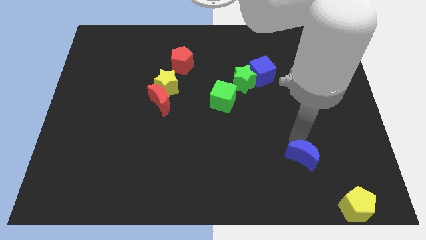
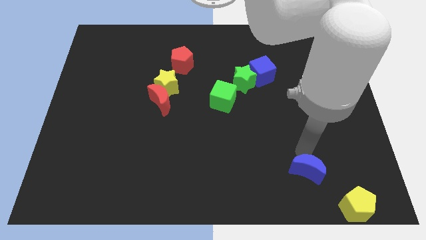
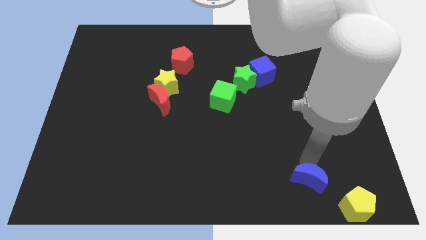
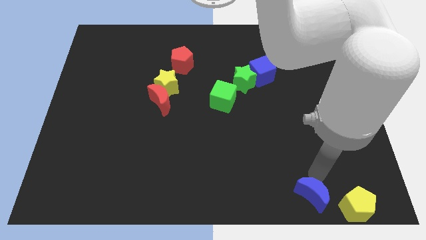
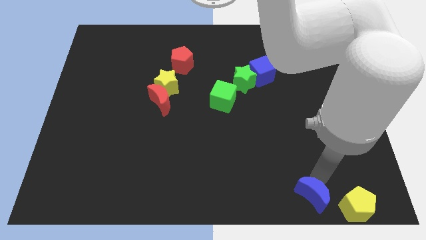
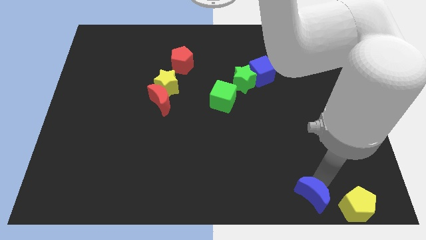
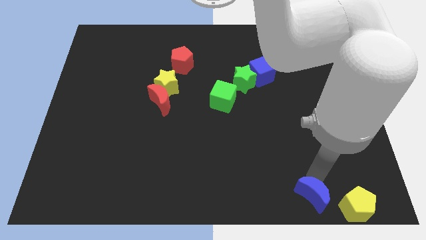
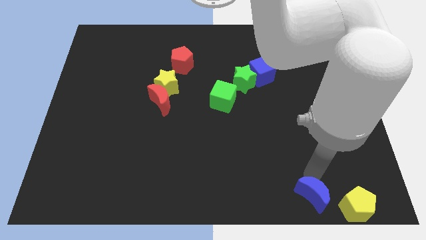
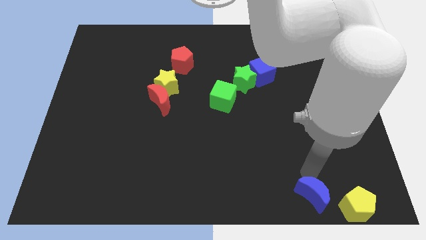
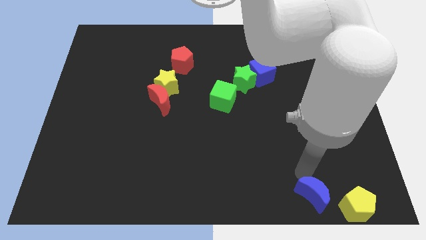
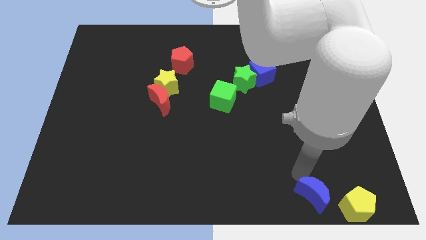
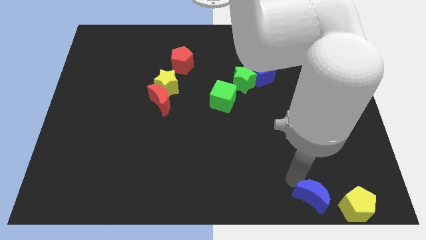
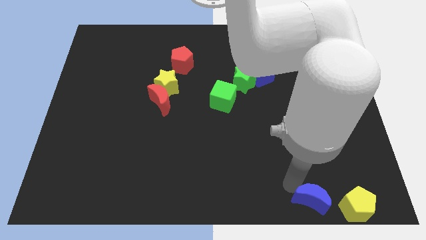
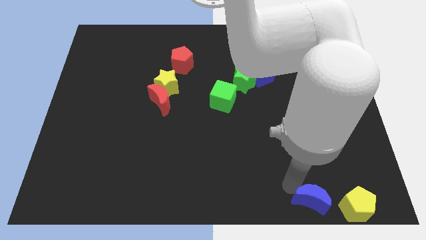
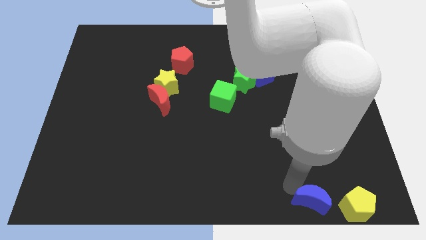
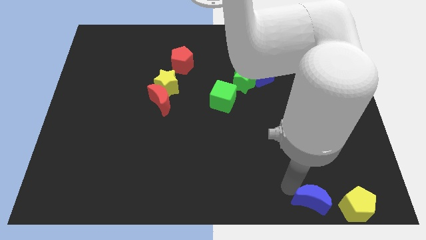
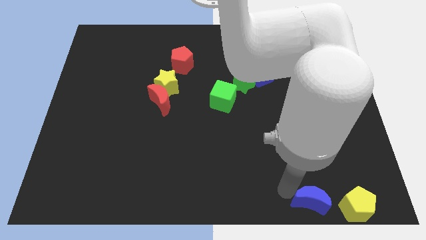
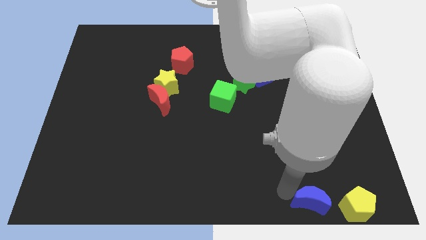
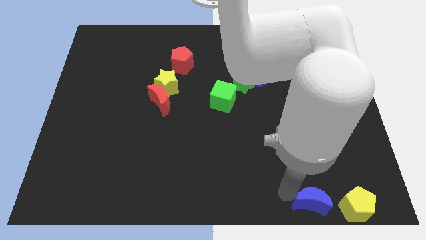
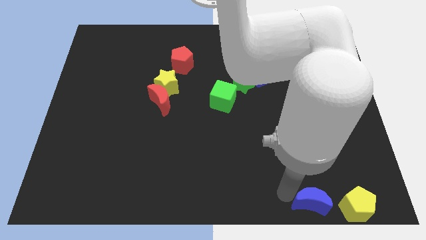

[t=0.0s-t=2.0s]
put the blue moon parallel left to the yellow pentagon

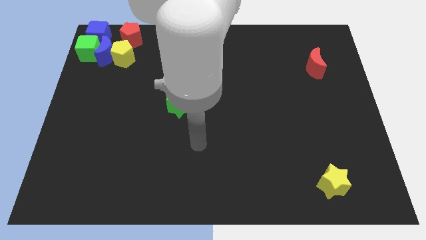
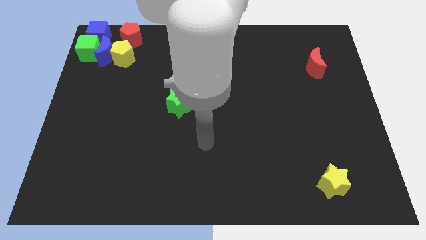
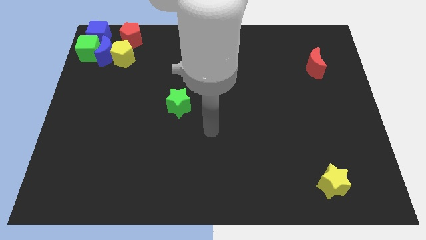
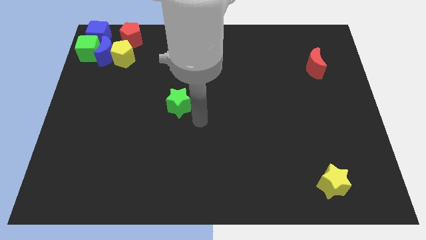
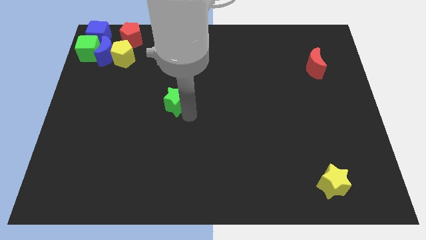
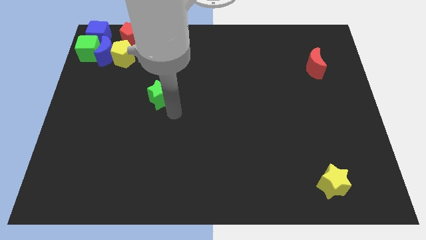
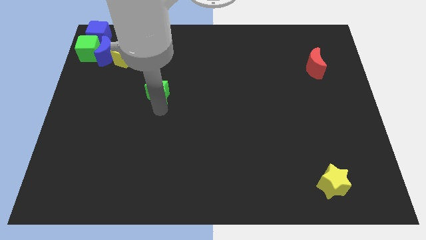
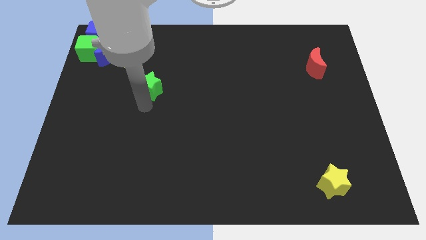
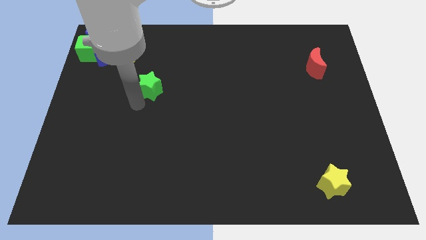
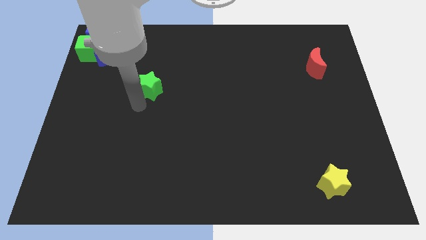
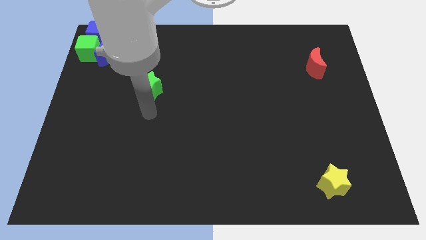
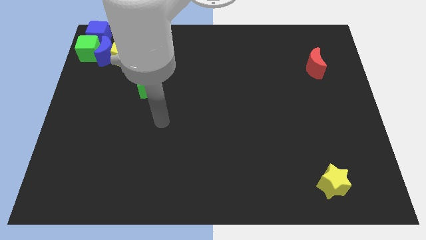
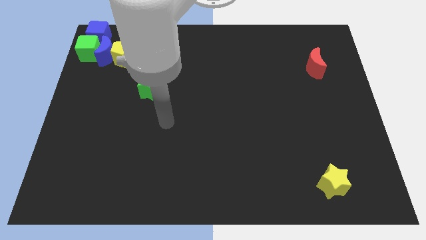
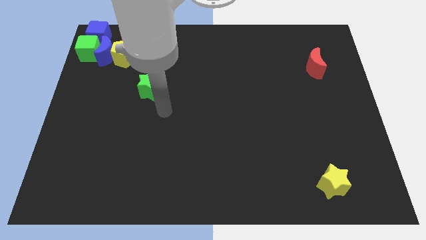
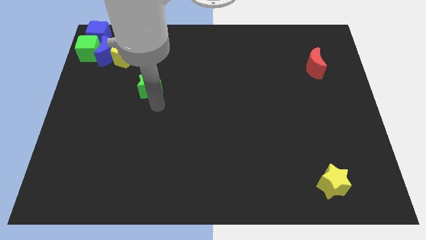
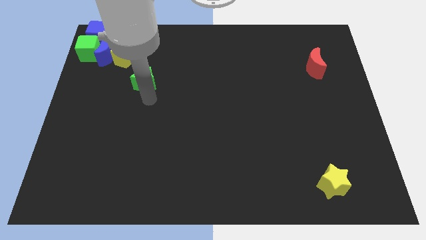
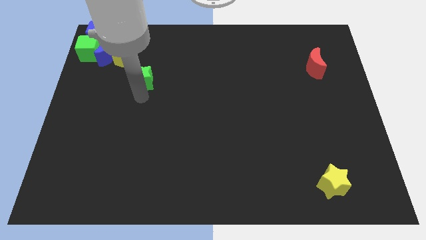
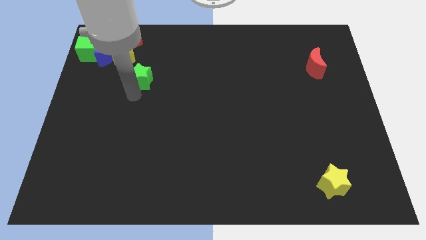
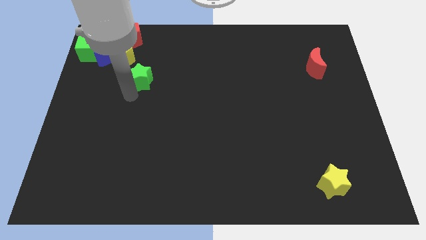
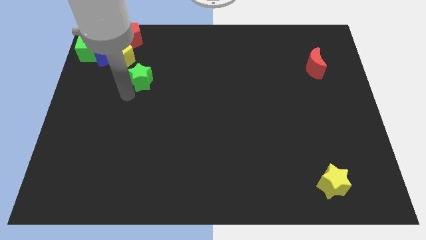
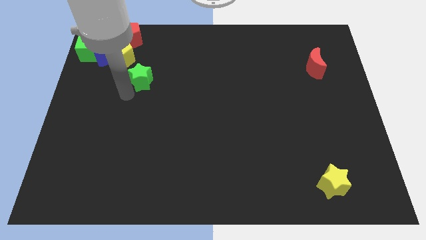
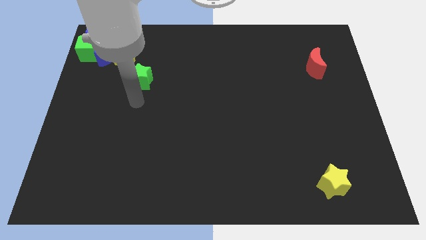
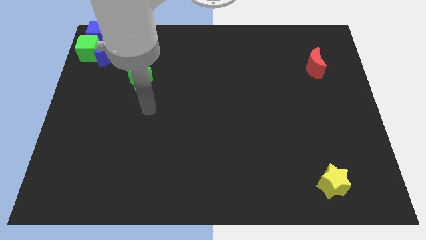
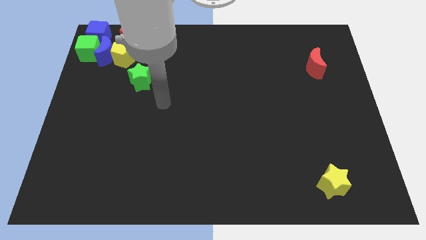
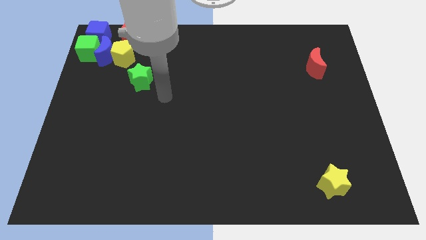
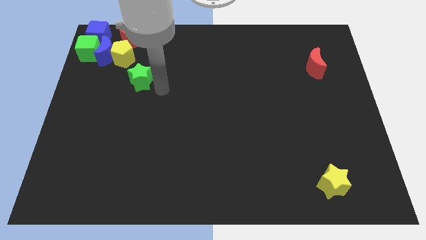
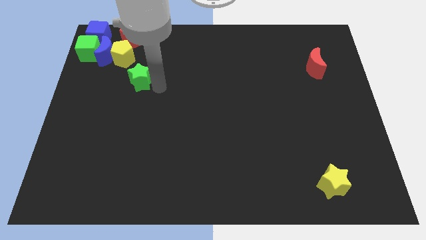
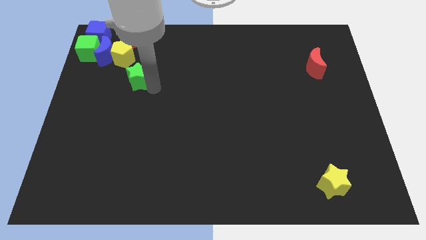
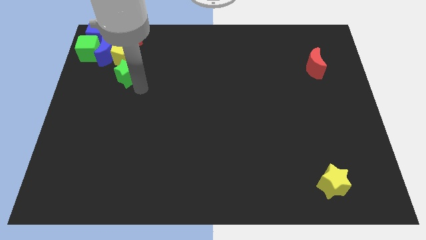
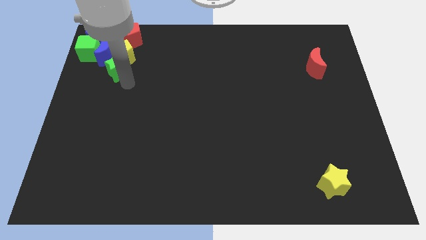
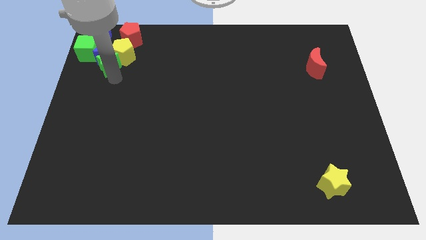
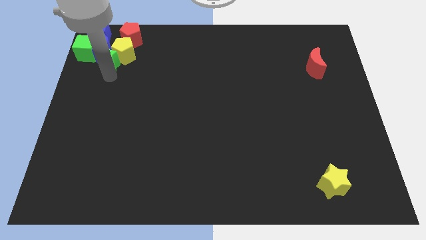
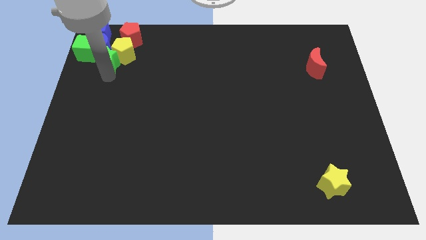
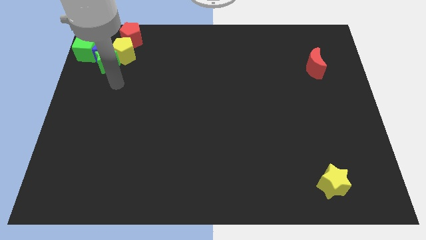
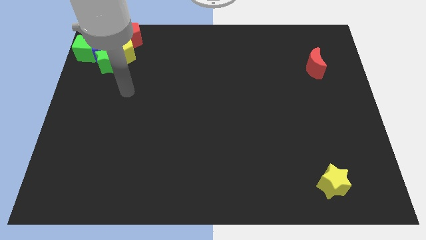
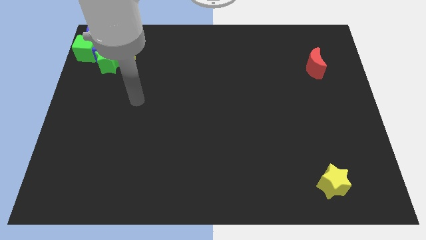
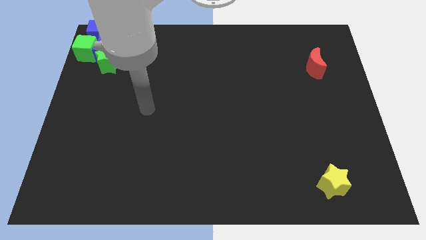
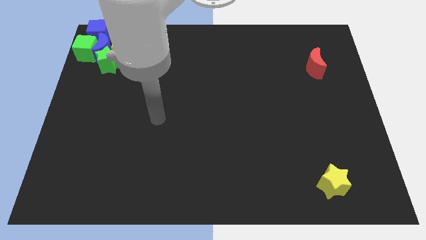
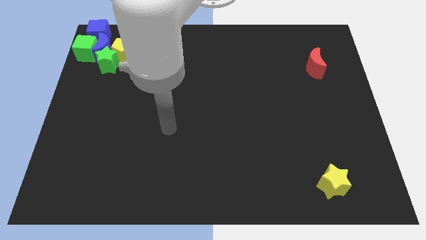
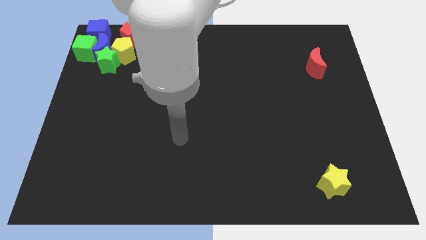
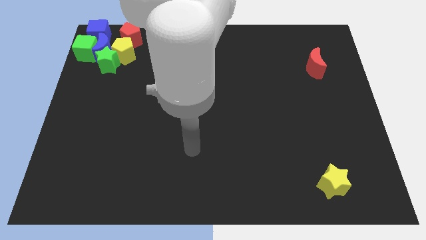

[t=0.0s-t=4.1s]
move green star into blue moon

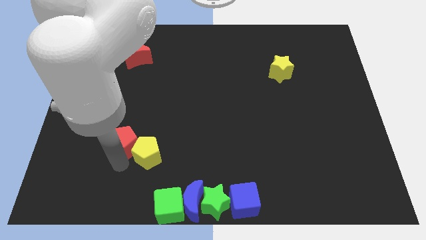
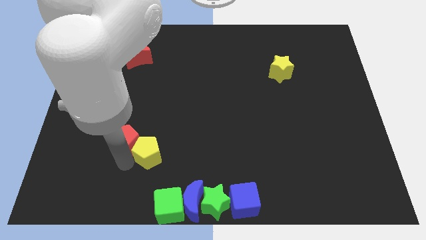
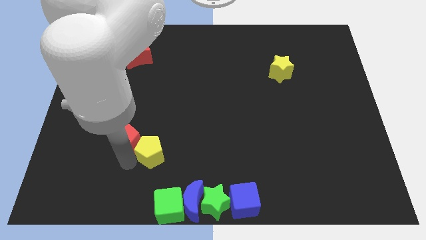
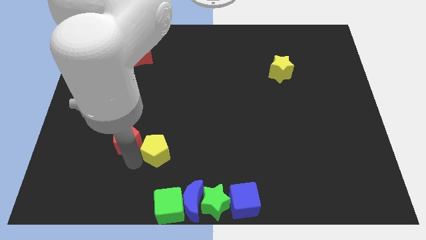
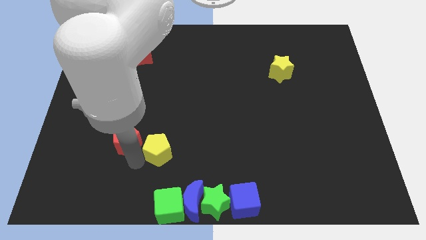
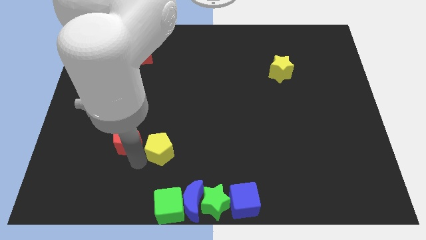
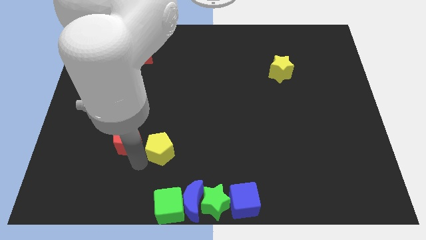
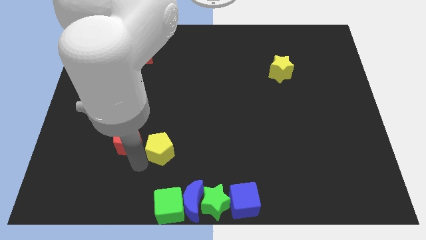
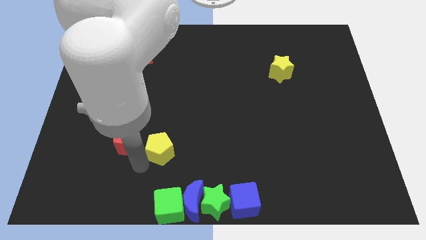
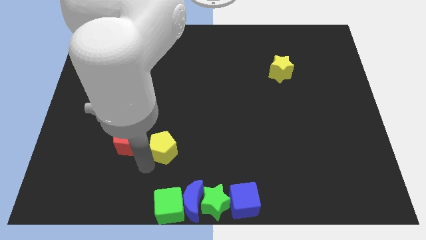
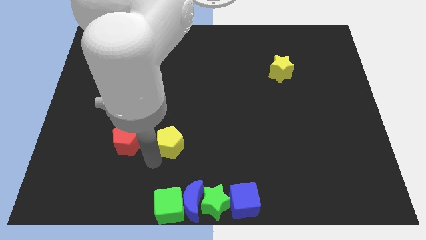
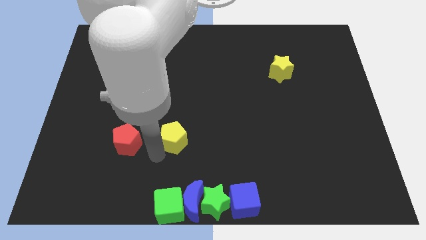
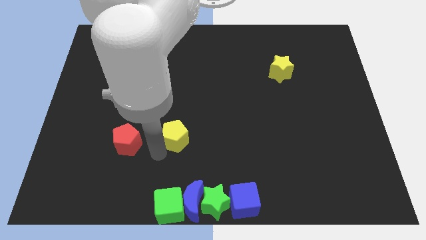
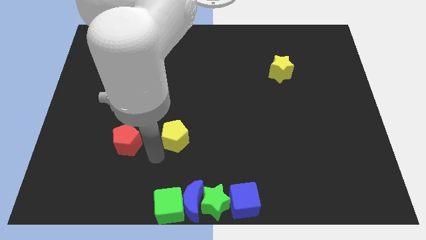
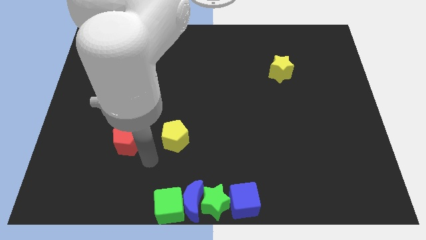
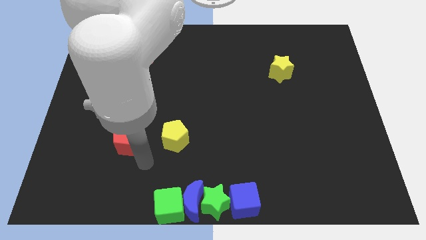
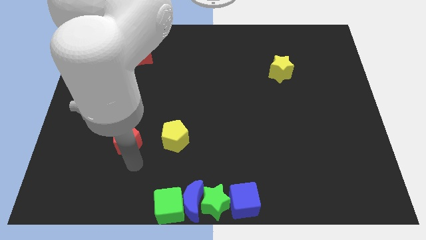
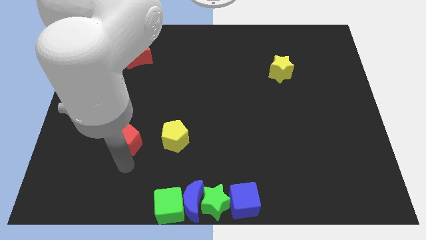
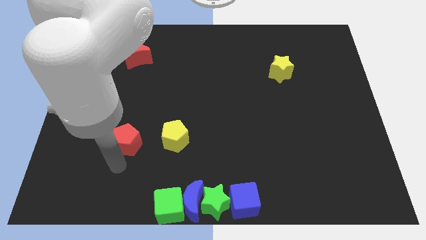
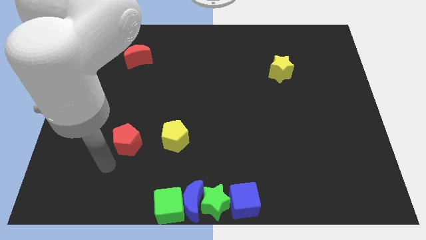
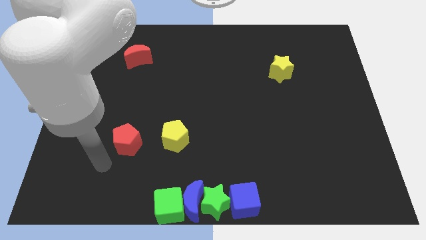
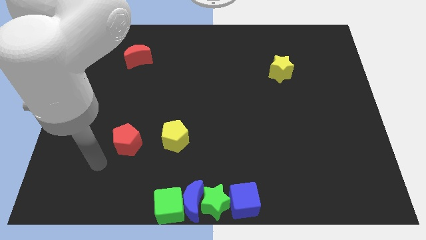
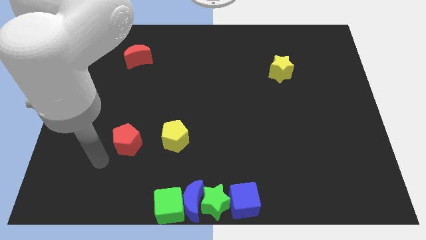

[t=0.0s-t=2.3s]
separate the red pentagon from the yellow pentagon

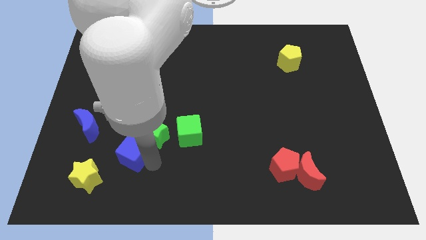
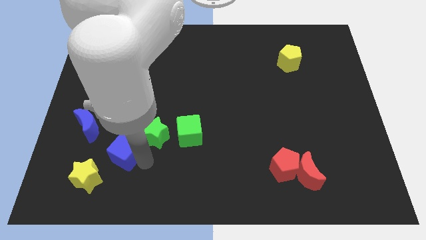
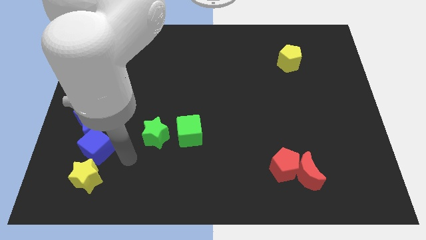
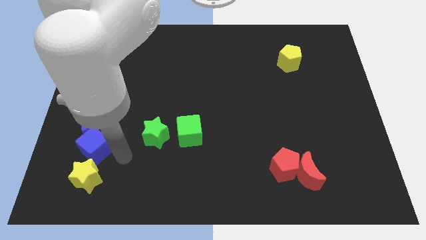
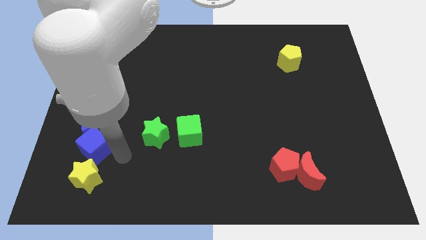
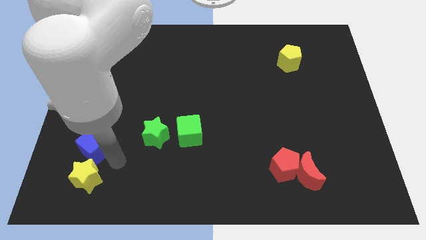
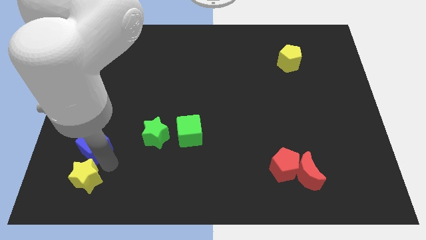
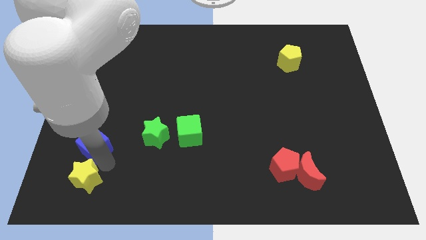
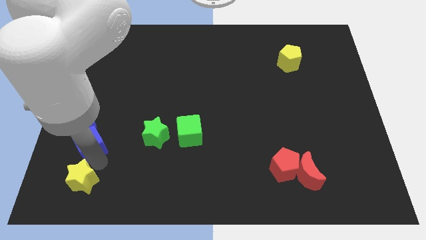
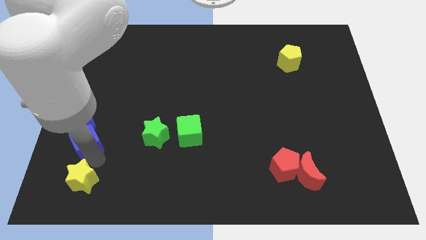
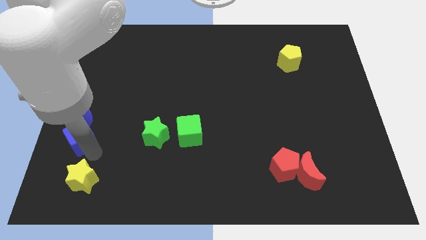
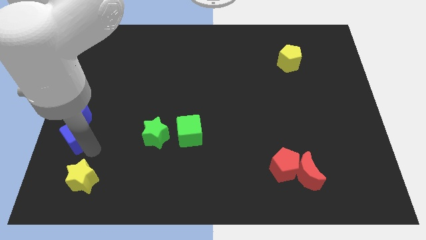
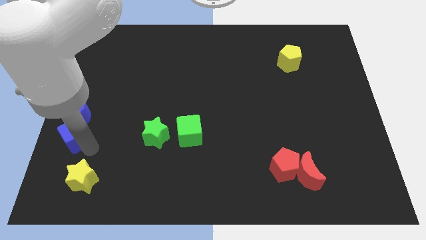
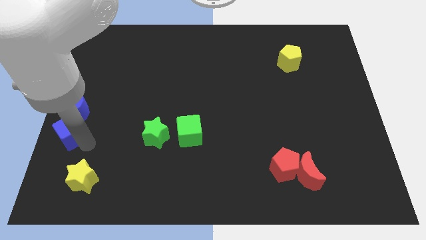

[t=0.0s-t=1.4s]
push the blue cube into the blue crescent
